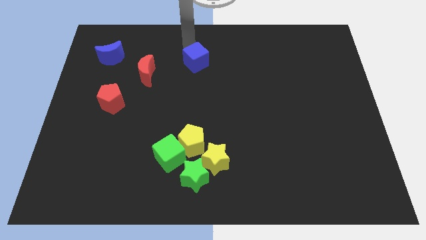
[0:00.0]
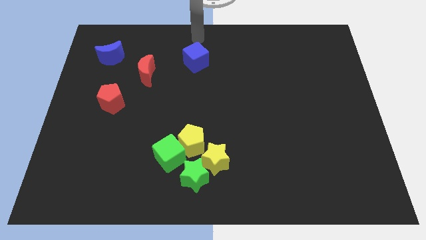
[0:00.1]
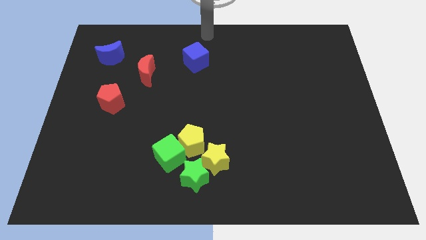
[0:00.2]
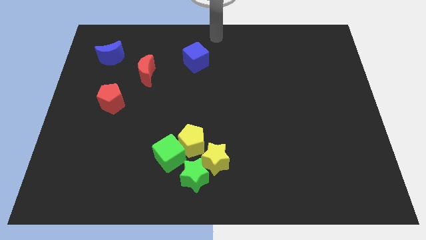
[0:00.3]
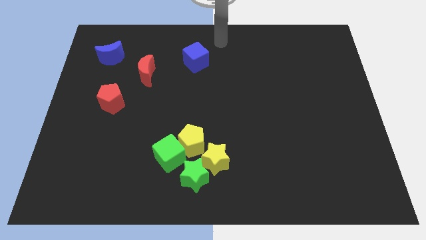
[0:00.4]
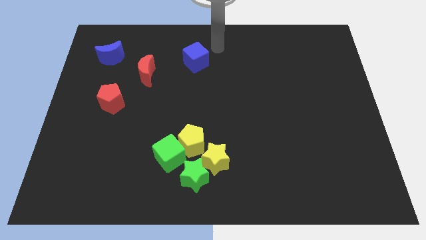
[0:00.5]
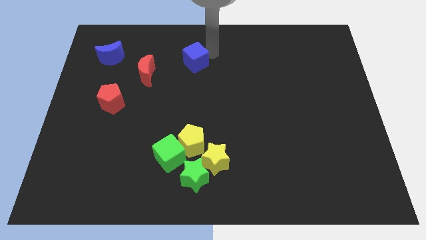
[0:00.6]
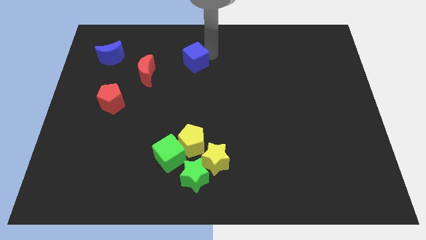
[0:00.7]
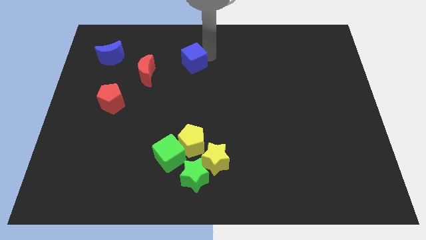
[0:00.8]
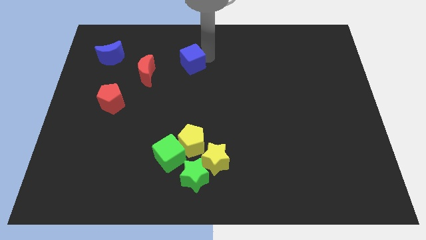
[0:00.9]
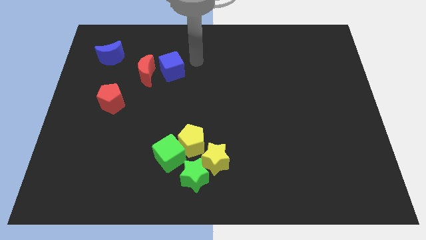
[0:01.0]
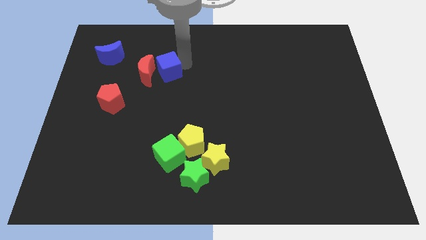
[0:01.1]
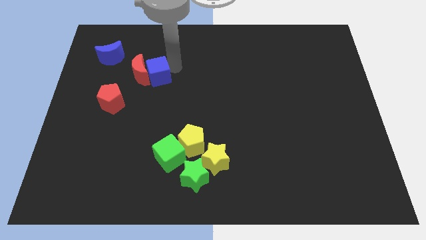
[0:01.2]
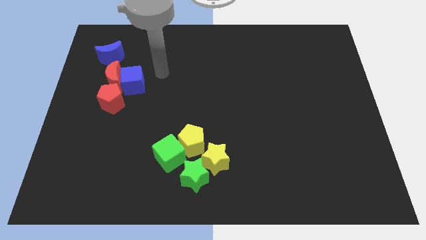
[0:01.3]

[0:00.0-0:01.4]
move the blue cube into the red moon

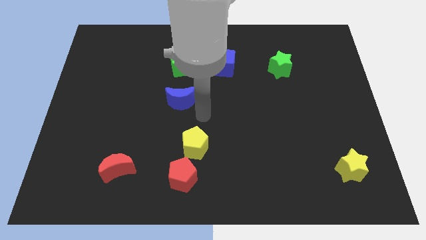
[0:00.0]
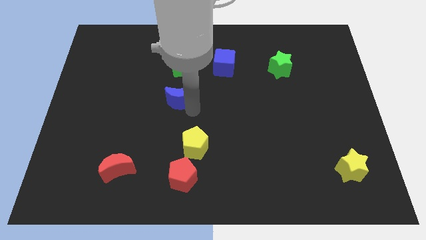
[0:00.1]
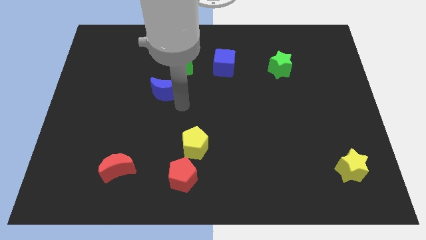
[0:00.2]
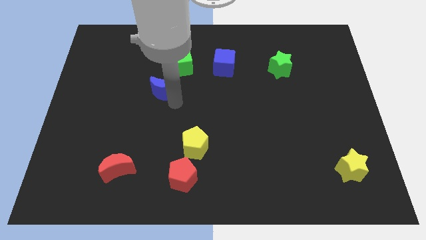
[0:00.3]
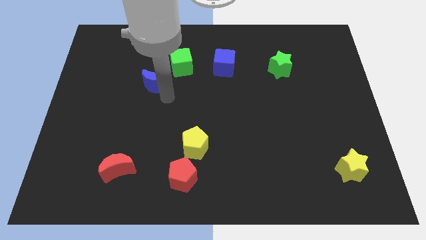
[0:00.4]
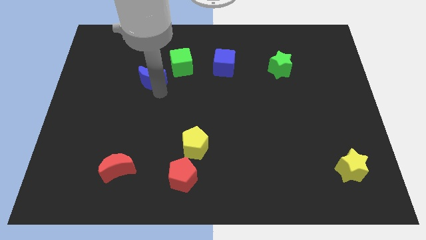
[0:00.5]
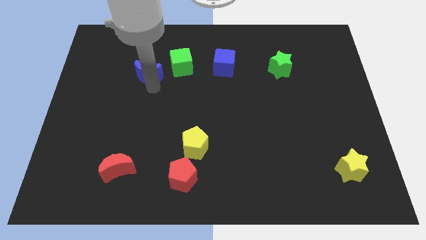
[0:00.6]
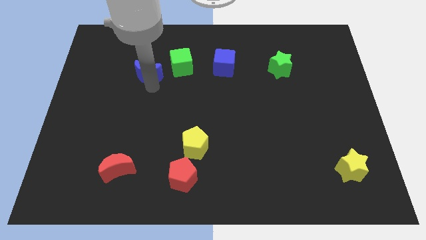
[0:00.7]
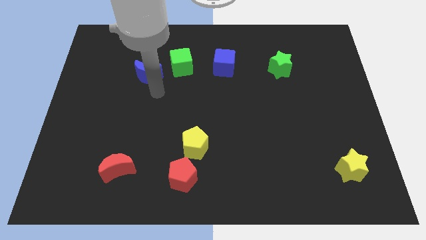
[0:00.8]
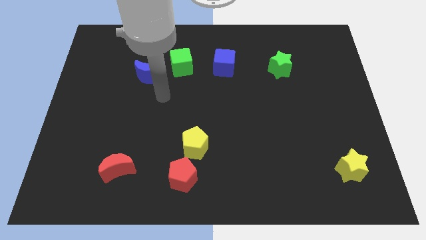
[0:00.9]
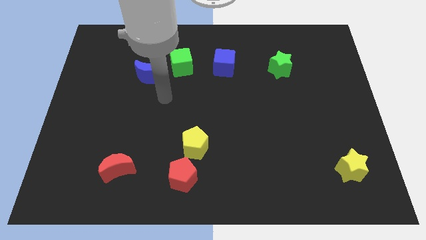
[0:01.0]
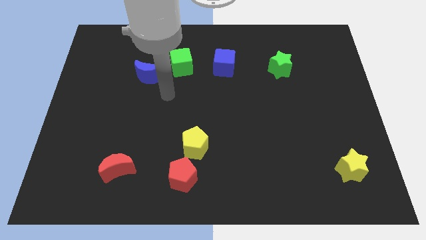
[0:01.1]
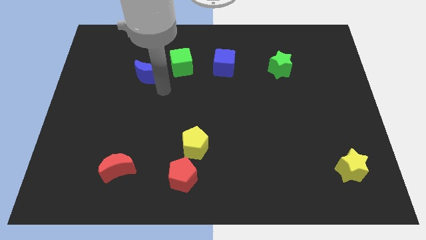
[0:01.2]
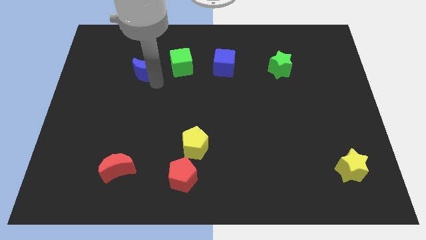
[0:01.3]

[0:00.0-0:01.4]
place blue crescent beside green cube

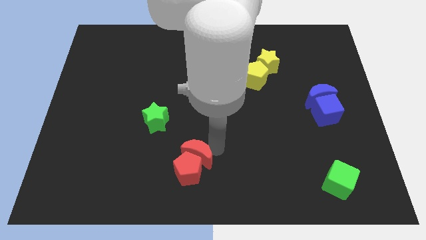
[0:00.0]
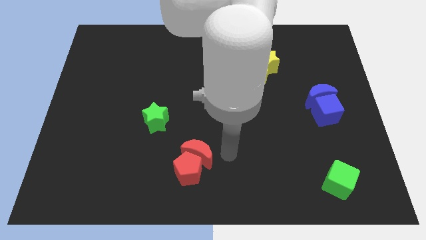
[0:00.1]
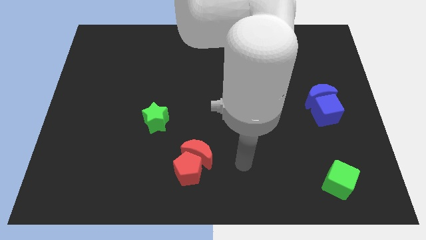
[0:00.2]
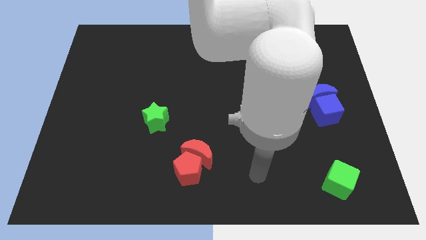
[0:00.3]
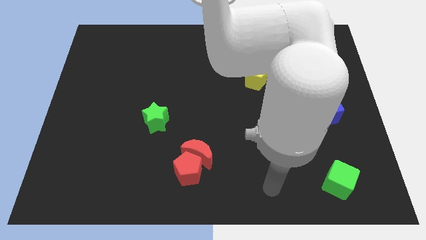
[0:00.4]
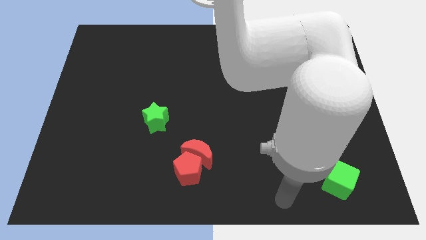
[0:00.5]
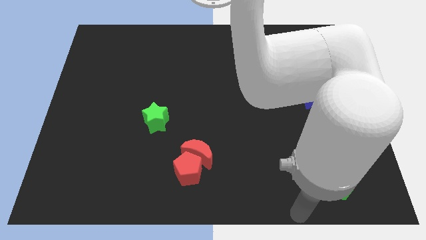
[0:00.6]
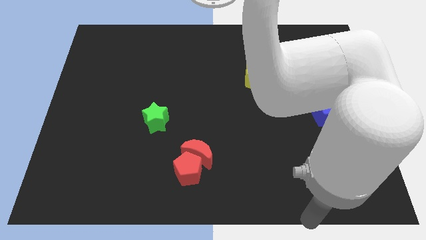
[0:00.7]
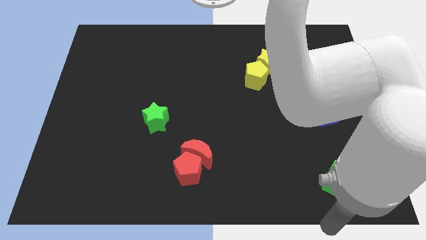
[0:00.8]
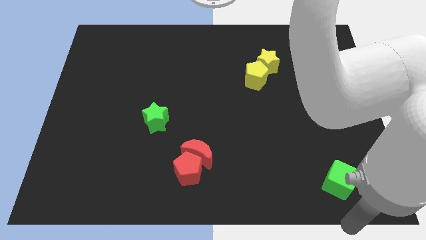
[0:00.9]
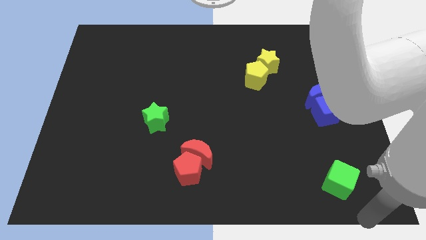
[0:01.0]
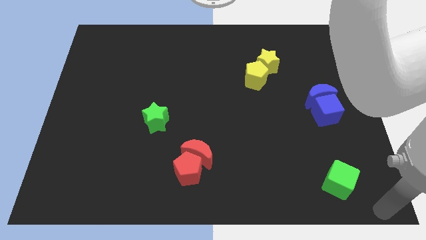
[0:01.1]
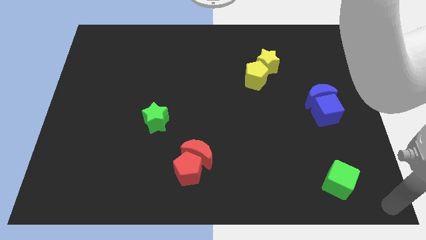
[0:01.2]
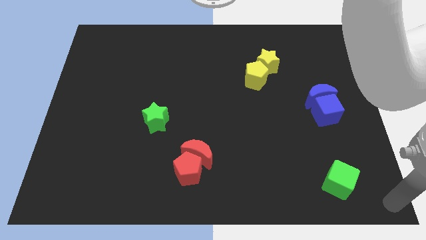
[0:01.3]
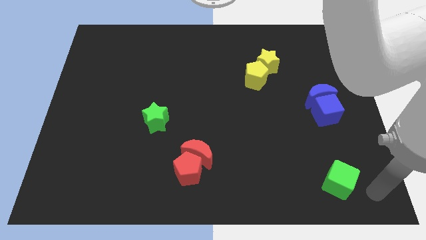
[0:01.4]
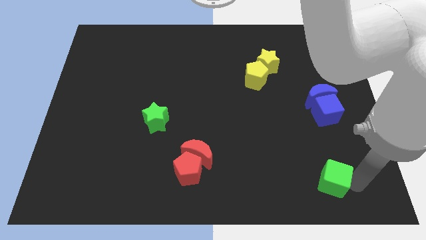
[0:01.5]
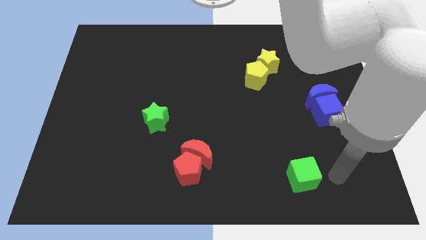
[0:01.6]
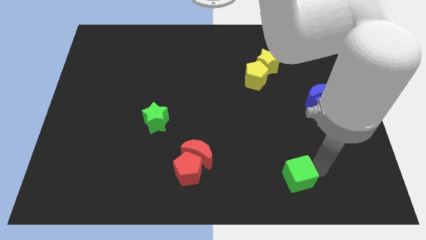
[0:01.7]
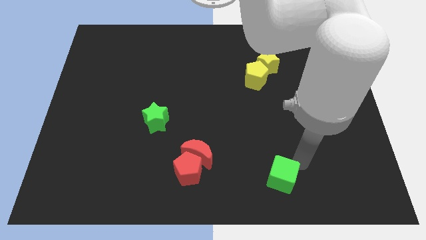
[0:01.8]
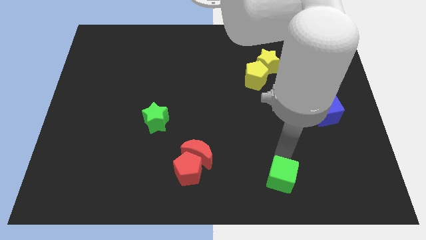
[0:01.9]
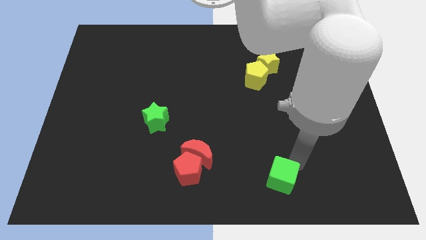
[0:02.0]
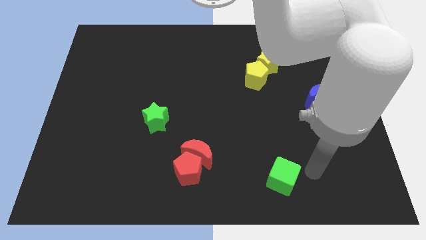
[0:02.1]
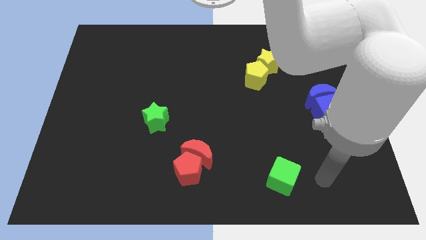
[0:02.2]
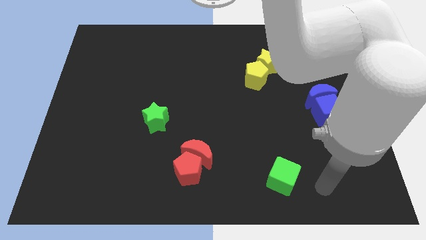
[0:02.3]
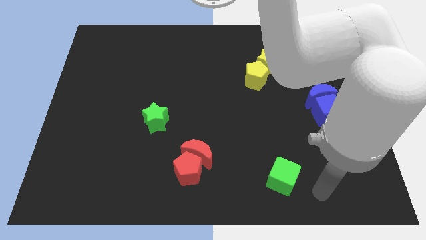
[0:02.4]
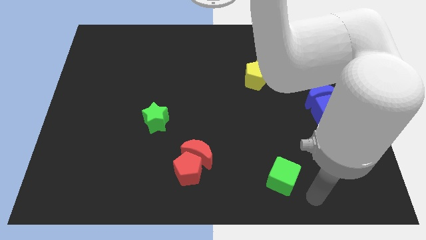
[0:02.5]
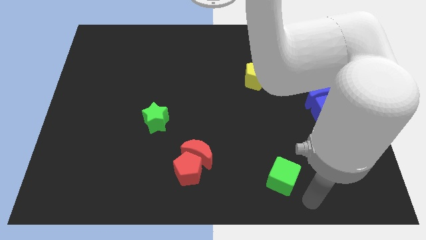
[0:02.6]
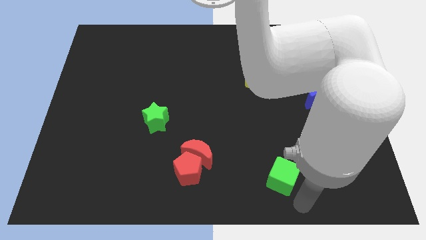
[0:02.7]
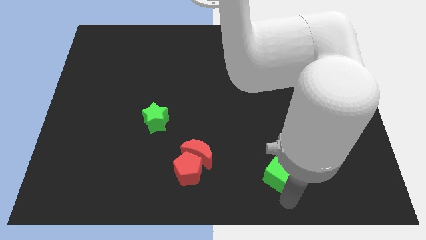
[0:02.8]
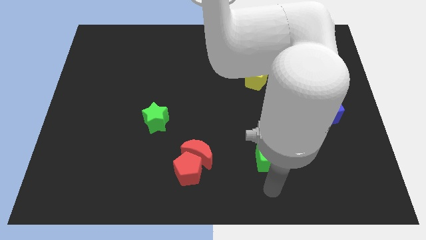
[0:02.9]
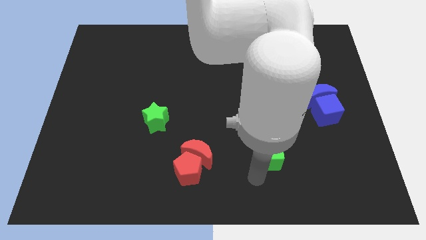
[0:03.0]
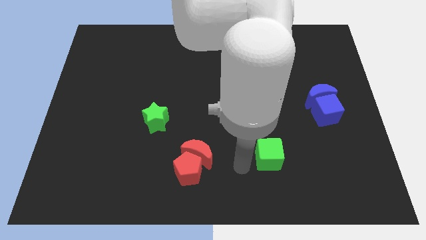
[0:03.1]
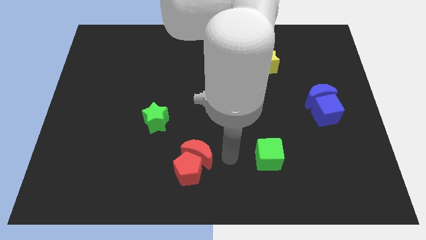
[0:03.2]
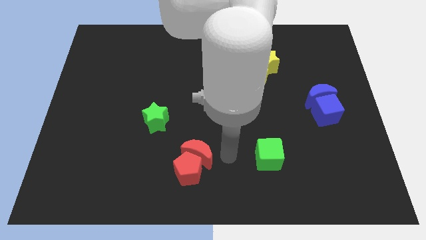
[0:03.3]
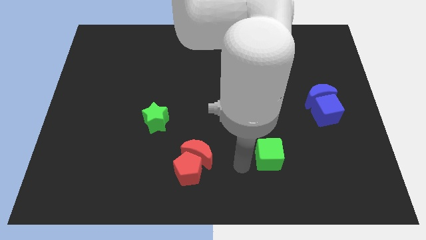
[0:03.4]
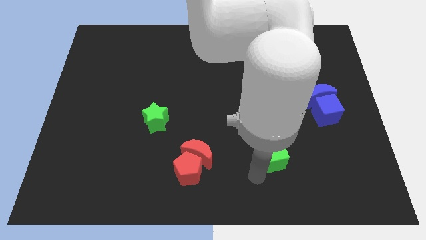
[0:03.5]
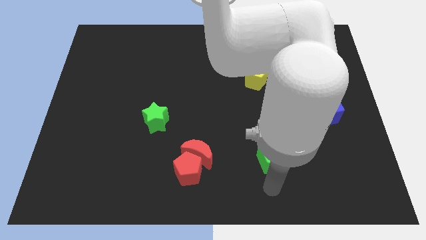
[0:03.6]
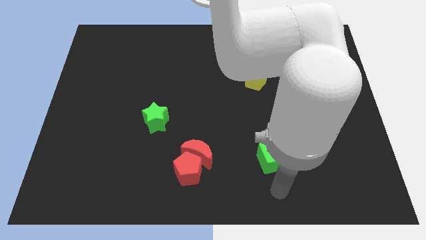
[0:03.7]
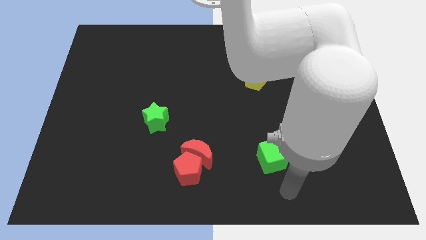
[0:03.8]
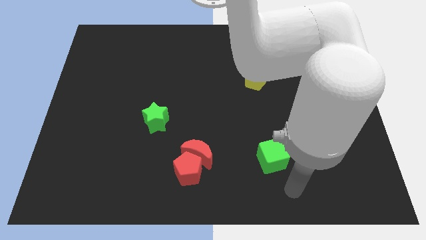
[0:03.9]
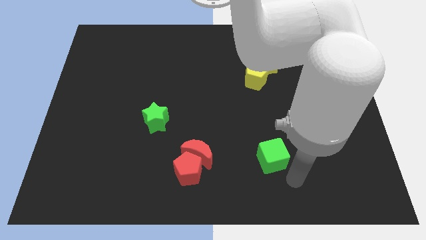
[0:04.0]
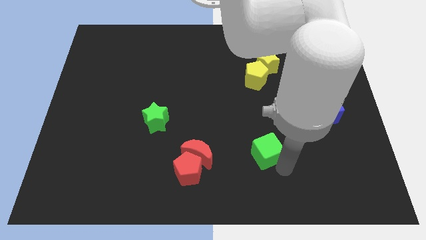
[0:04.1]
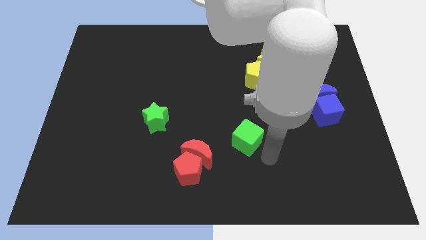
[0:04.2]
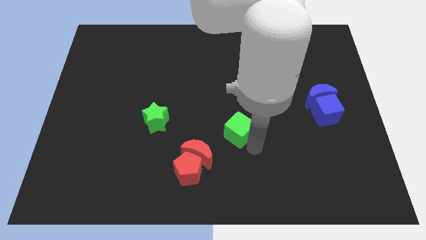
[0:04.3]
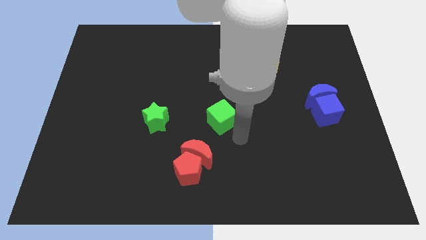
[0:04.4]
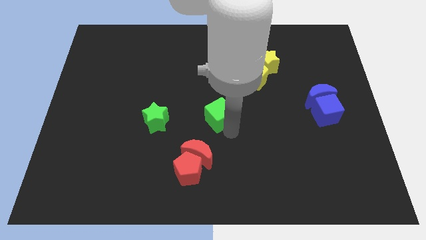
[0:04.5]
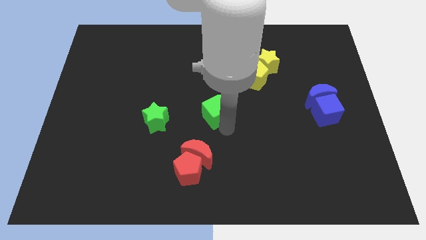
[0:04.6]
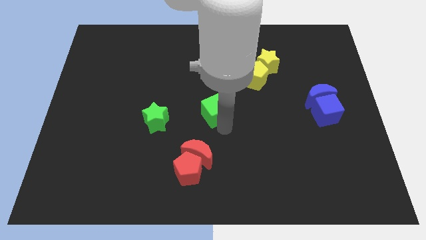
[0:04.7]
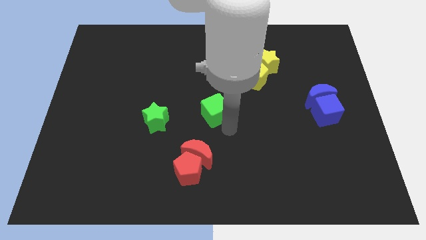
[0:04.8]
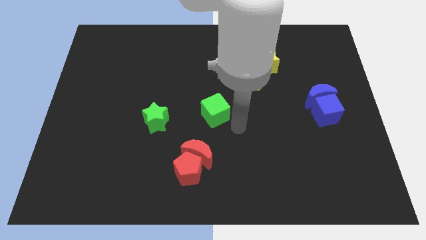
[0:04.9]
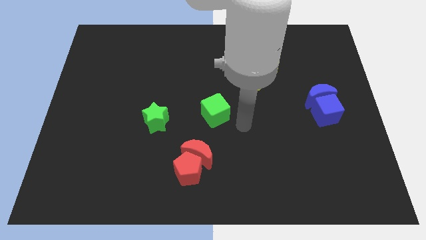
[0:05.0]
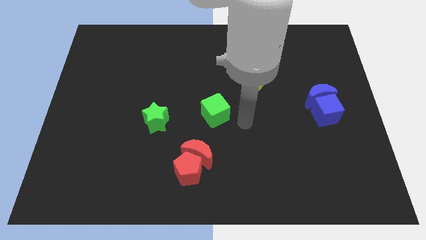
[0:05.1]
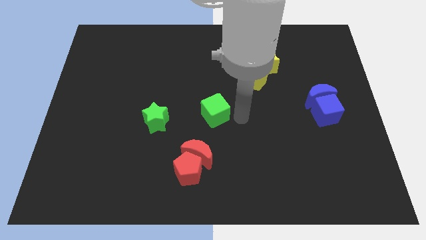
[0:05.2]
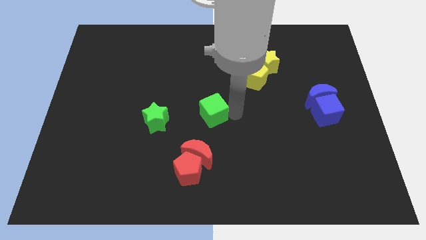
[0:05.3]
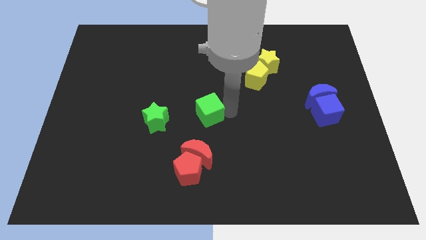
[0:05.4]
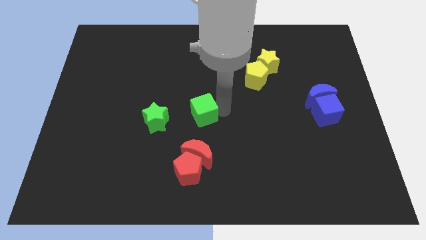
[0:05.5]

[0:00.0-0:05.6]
move the green cube to the top of the red crescent

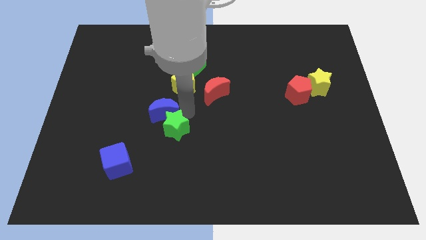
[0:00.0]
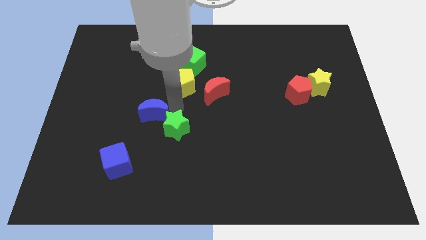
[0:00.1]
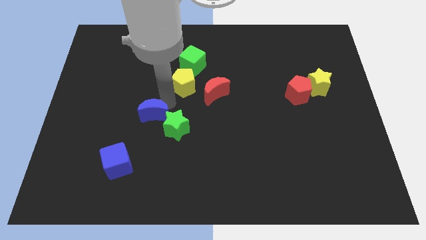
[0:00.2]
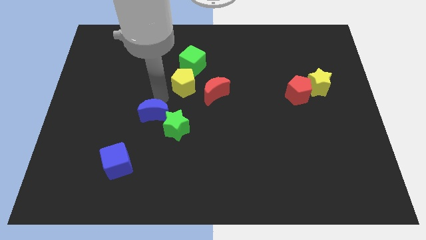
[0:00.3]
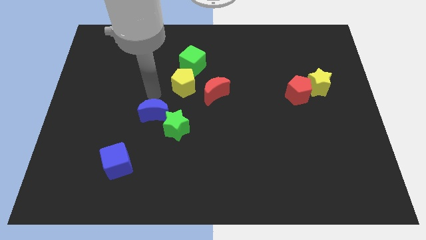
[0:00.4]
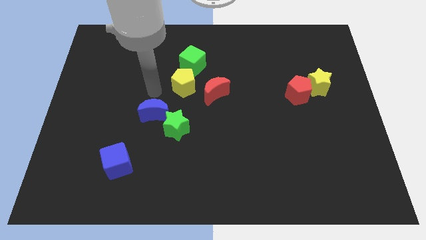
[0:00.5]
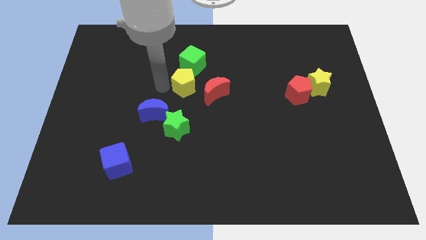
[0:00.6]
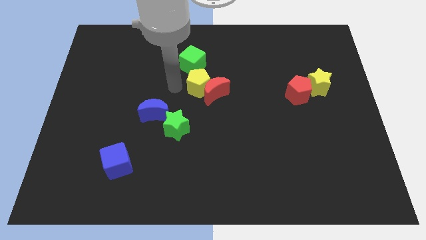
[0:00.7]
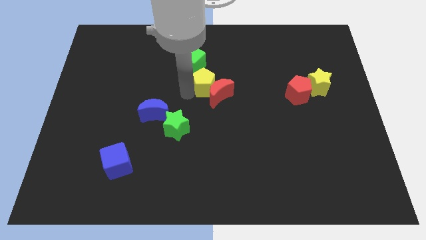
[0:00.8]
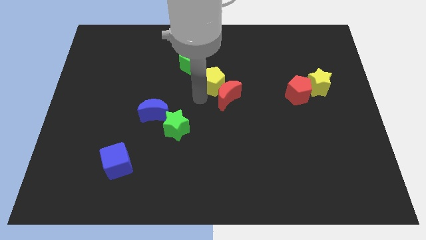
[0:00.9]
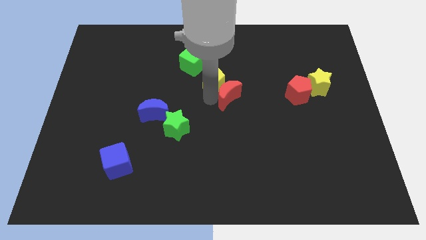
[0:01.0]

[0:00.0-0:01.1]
move the yellow pentagon into the red moon
